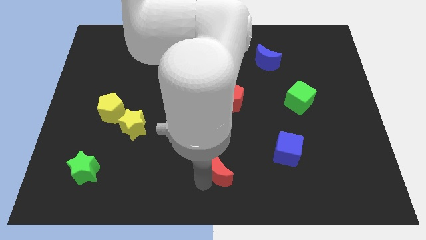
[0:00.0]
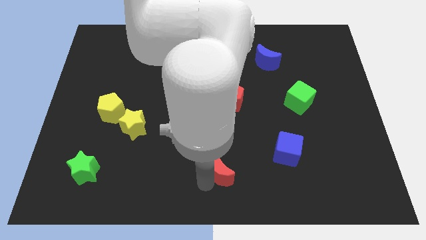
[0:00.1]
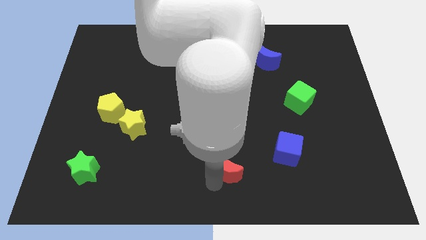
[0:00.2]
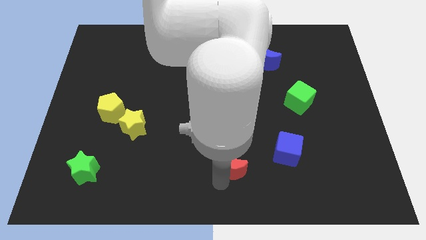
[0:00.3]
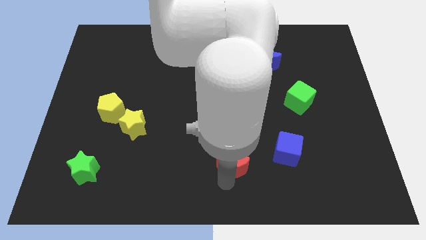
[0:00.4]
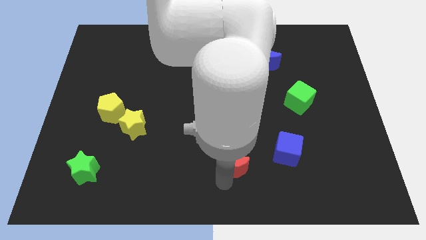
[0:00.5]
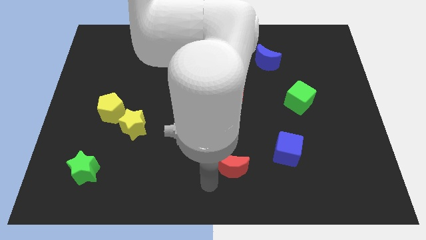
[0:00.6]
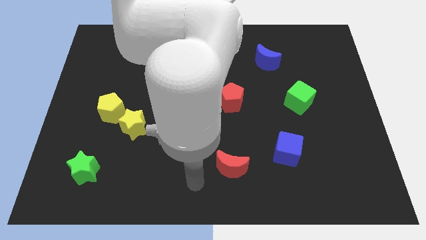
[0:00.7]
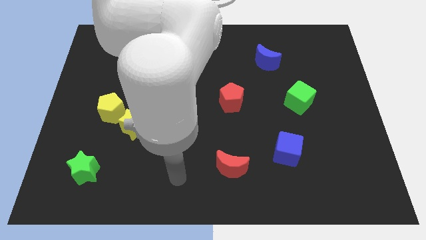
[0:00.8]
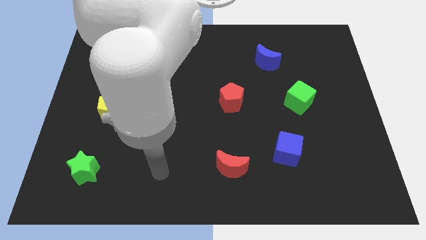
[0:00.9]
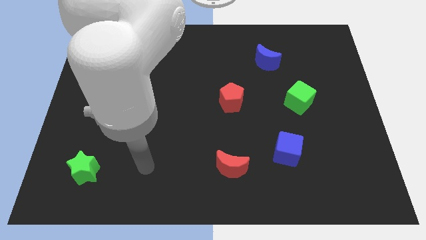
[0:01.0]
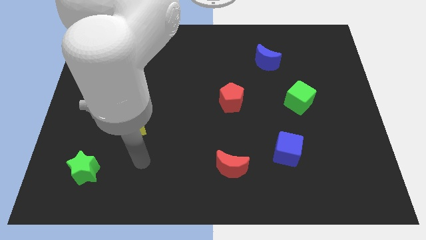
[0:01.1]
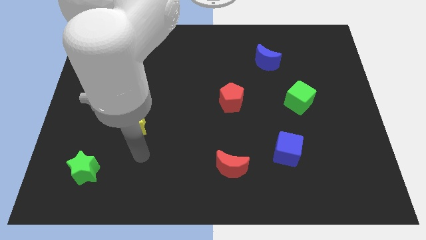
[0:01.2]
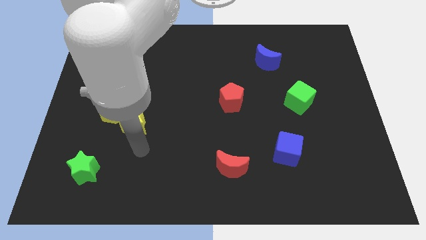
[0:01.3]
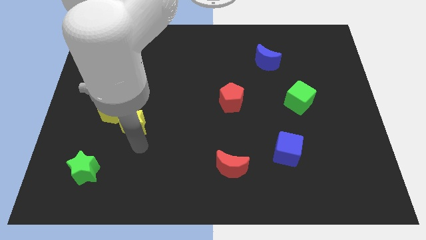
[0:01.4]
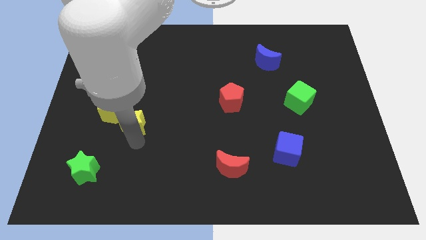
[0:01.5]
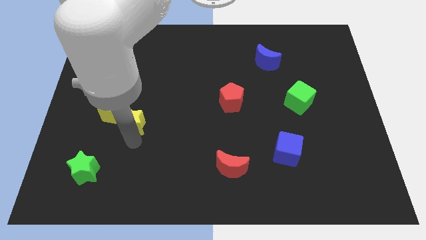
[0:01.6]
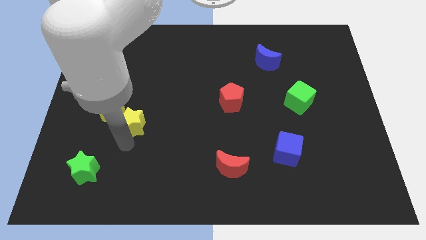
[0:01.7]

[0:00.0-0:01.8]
move your arm towards the yellow star

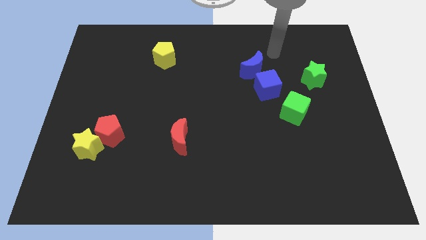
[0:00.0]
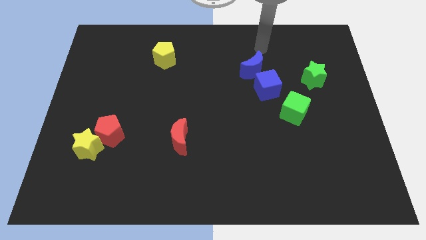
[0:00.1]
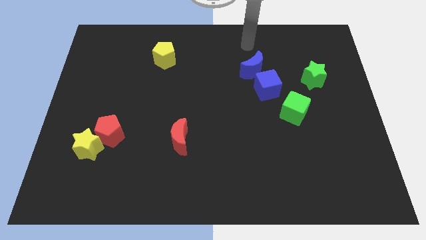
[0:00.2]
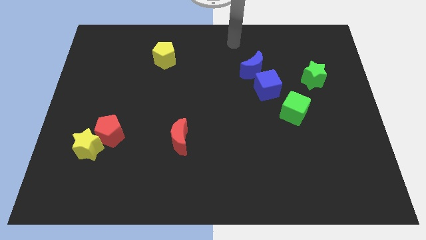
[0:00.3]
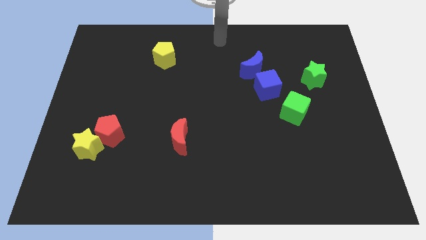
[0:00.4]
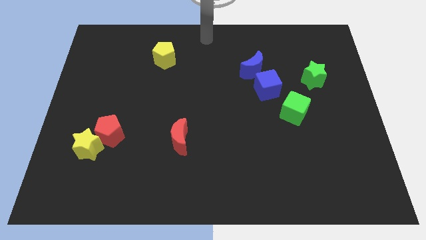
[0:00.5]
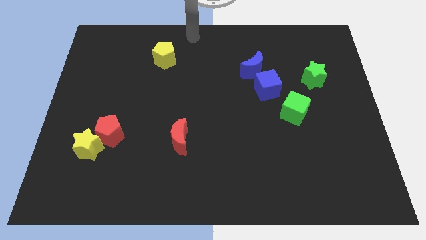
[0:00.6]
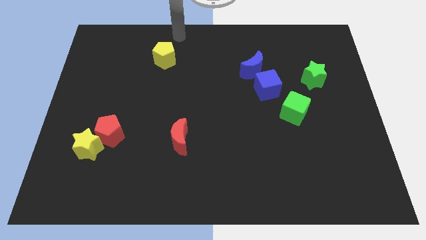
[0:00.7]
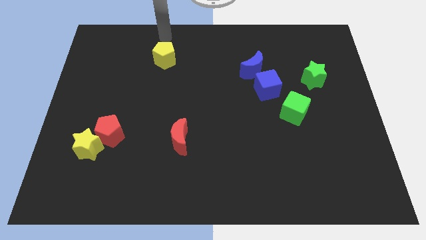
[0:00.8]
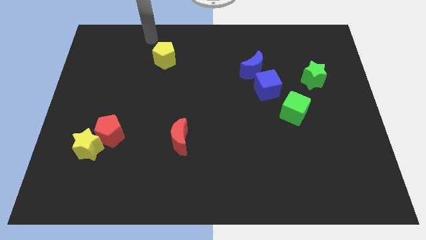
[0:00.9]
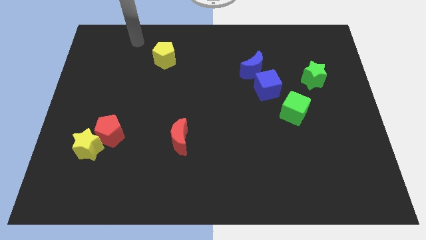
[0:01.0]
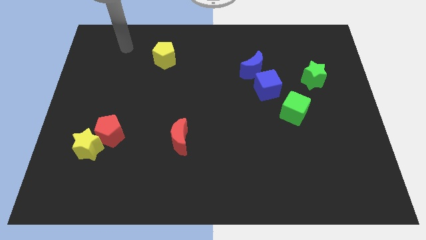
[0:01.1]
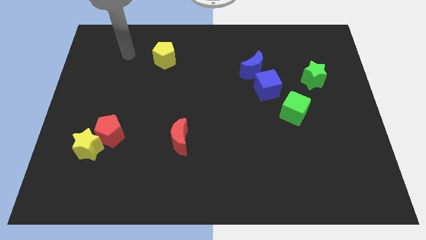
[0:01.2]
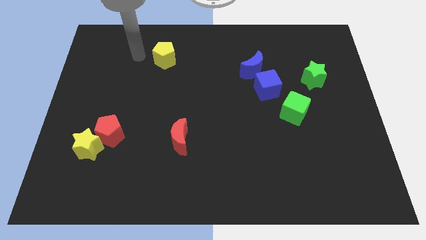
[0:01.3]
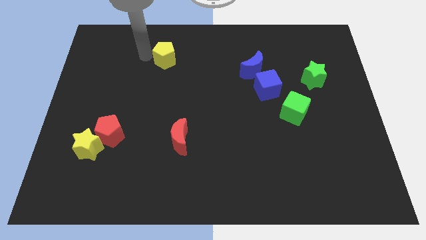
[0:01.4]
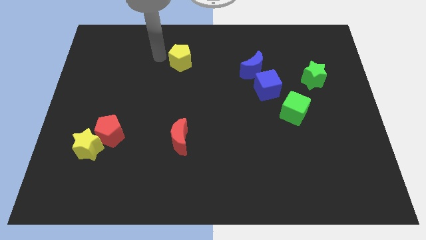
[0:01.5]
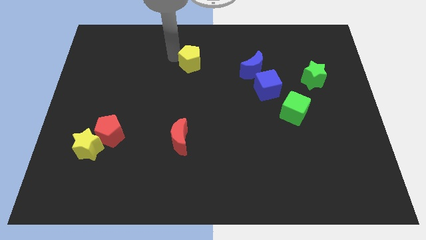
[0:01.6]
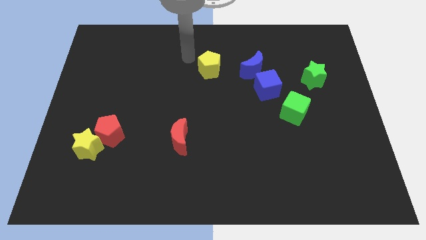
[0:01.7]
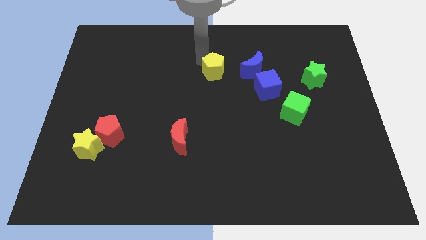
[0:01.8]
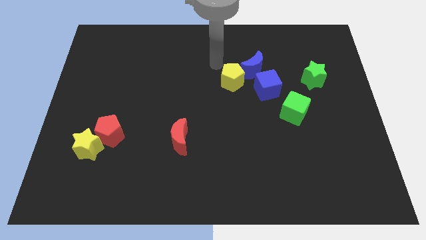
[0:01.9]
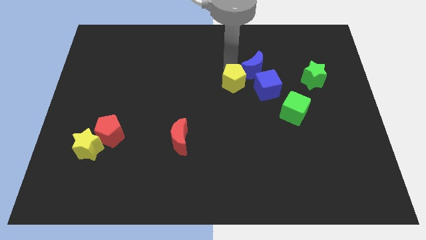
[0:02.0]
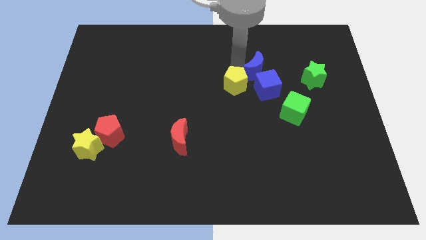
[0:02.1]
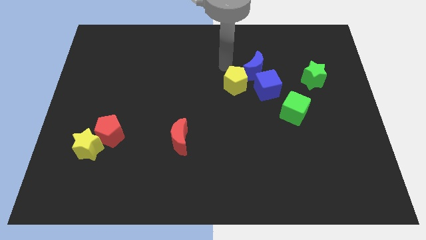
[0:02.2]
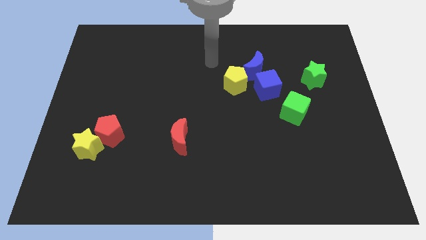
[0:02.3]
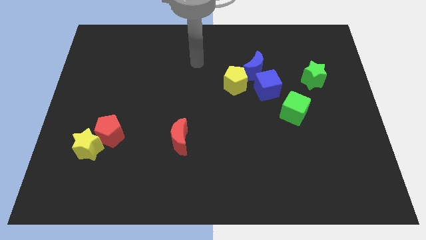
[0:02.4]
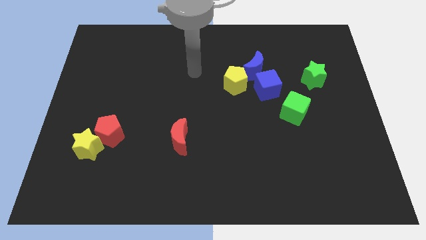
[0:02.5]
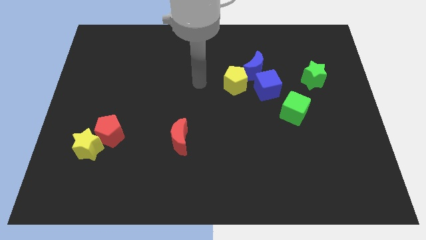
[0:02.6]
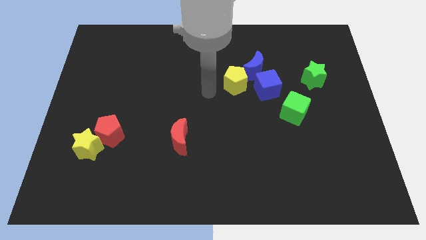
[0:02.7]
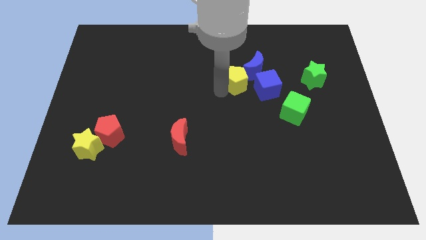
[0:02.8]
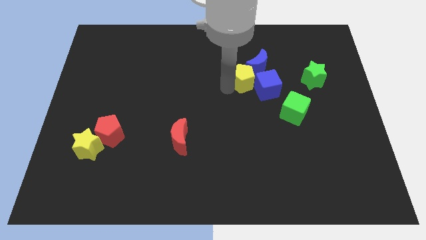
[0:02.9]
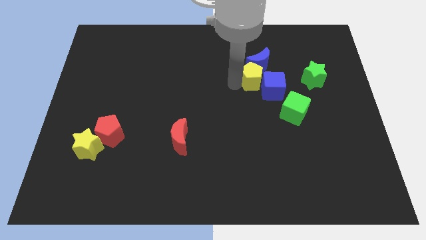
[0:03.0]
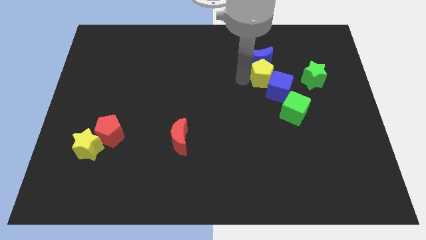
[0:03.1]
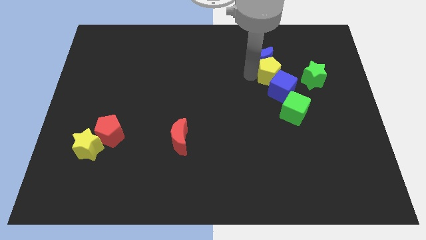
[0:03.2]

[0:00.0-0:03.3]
push the yellow pentagon to the bottom of the blue crescent

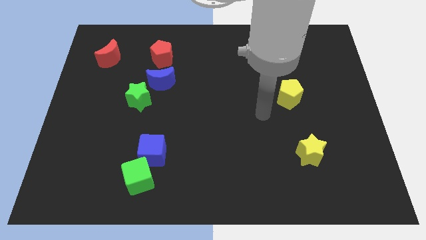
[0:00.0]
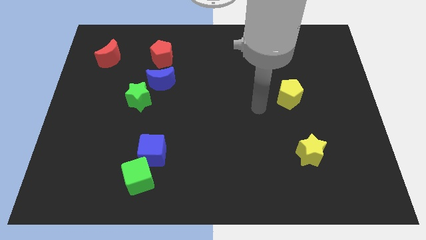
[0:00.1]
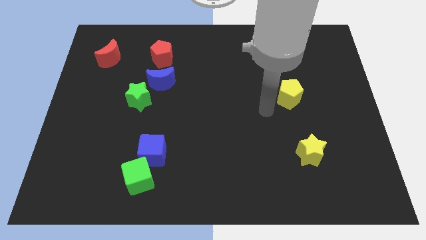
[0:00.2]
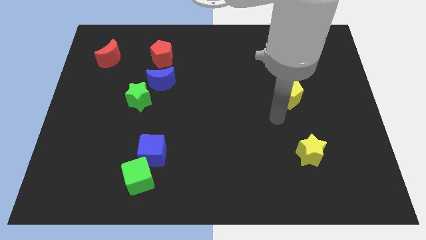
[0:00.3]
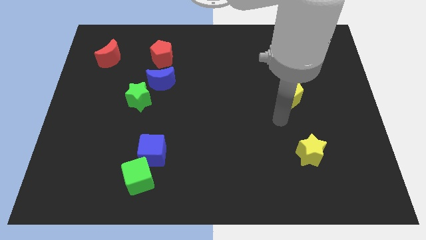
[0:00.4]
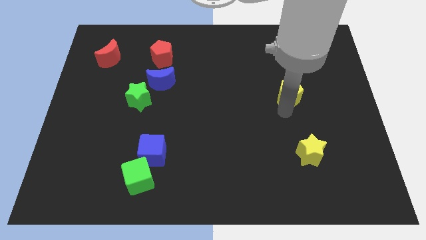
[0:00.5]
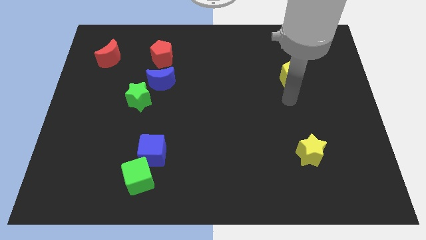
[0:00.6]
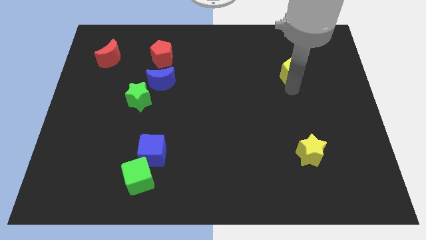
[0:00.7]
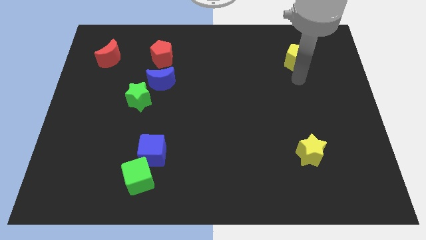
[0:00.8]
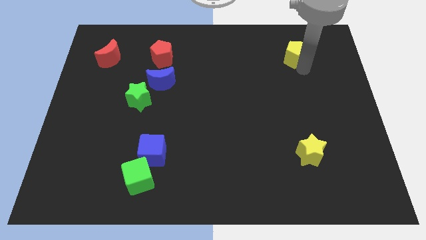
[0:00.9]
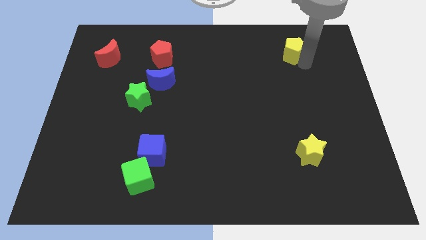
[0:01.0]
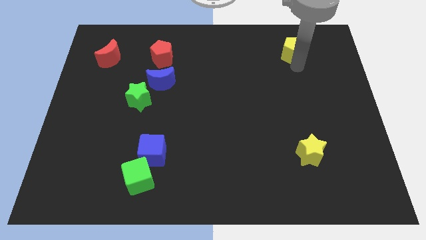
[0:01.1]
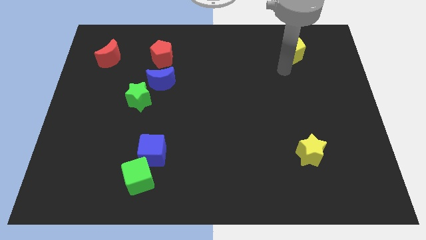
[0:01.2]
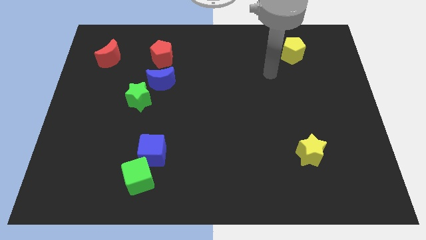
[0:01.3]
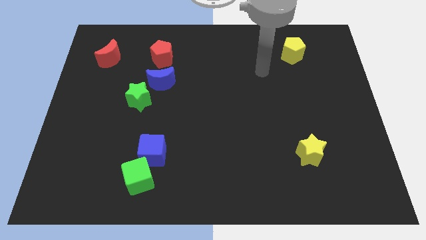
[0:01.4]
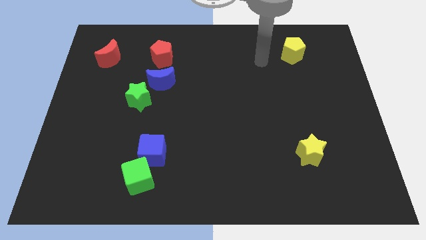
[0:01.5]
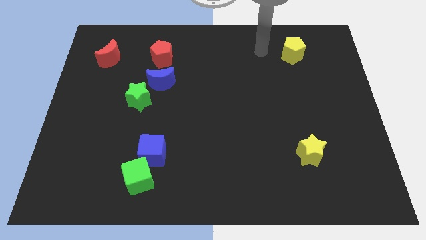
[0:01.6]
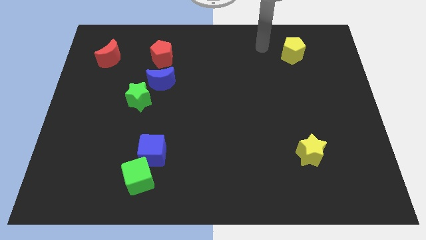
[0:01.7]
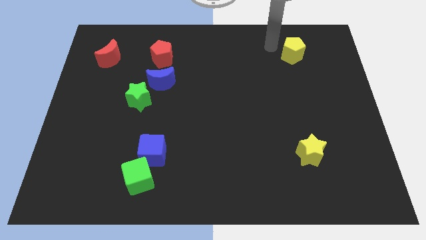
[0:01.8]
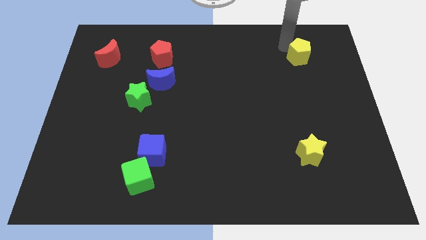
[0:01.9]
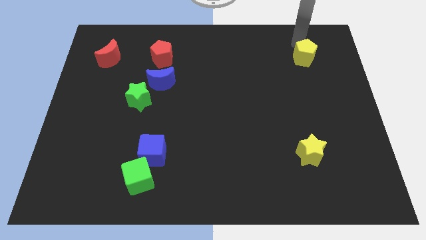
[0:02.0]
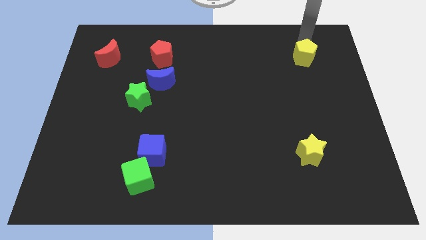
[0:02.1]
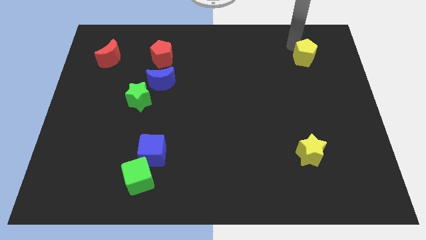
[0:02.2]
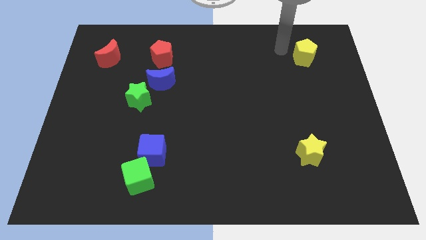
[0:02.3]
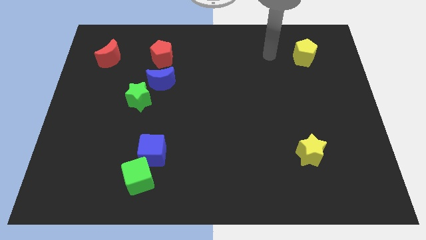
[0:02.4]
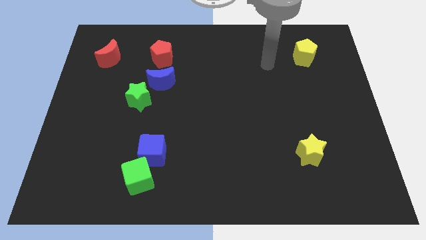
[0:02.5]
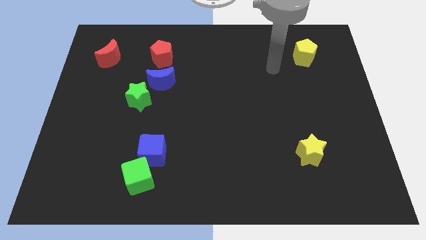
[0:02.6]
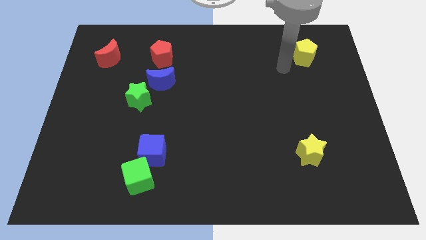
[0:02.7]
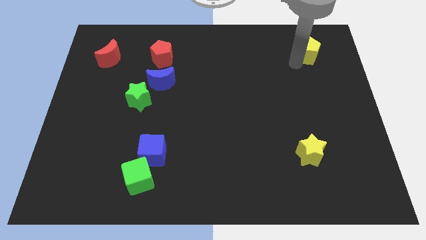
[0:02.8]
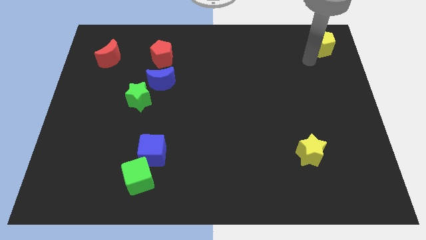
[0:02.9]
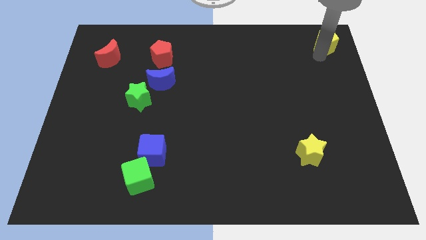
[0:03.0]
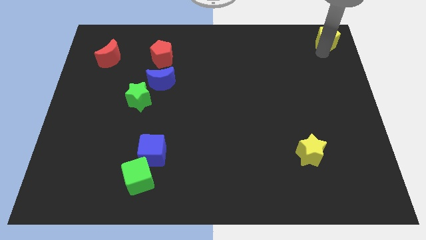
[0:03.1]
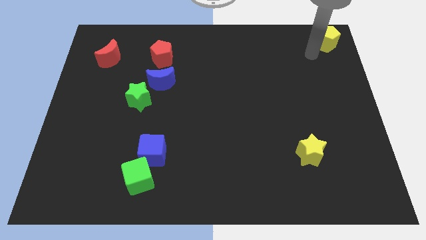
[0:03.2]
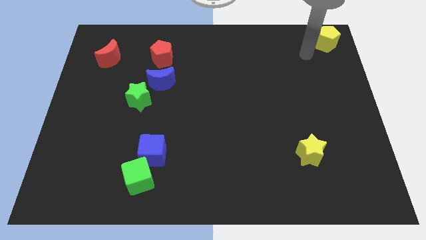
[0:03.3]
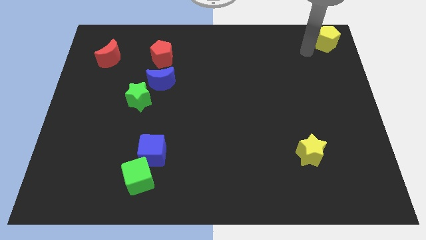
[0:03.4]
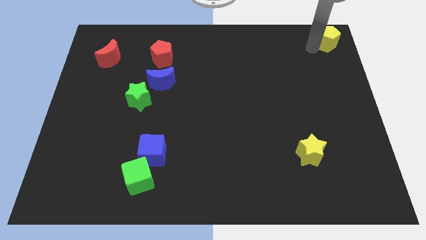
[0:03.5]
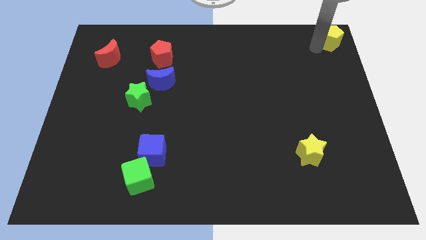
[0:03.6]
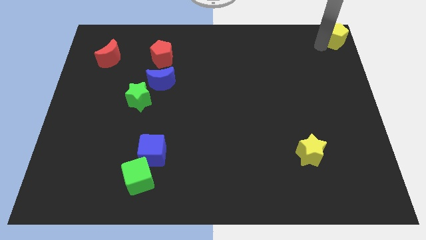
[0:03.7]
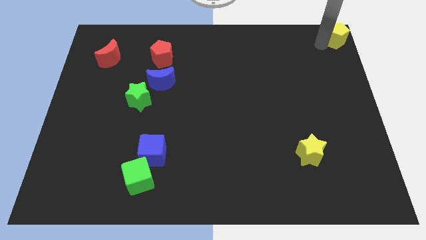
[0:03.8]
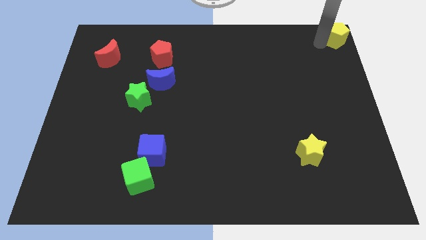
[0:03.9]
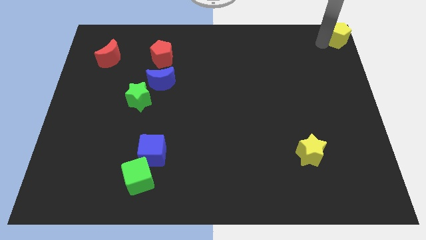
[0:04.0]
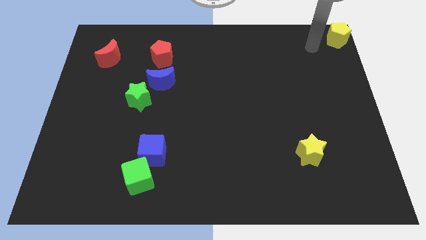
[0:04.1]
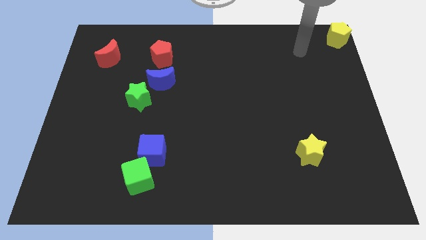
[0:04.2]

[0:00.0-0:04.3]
push the yellow pentagon to the top right corner
